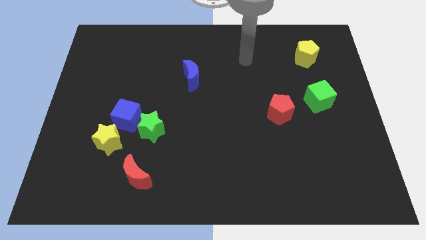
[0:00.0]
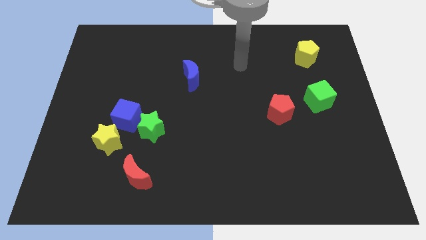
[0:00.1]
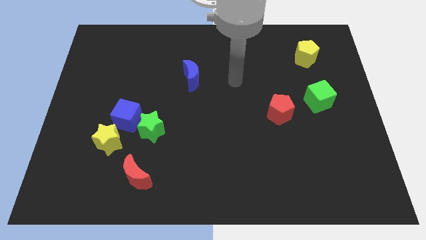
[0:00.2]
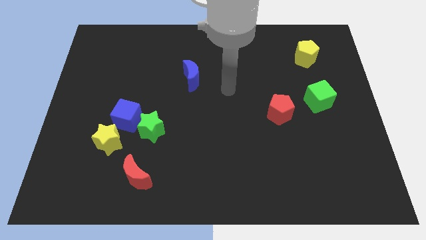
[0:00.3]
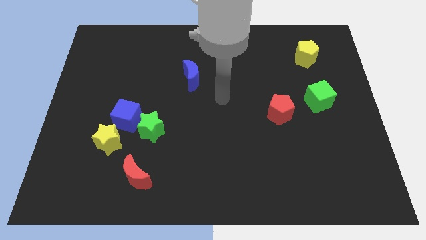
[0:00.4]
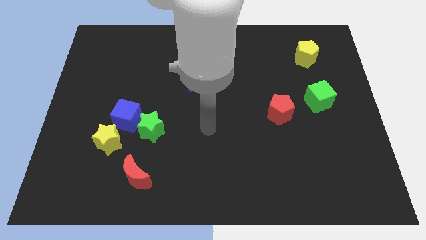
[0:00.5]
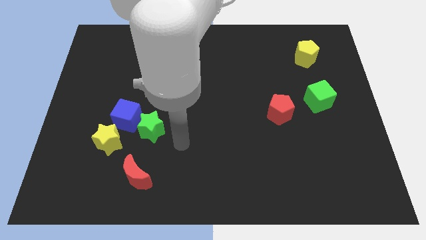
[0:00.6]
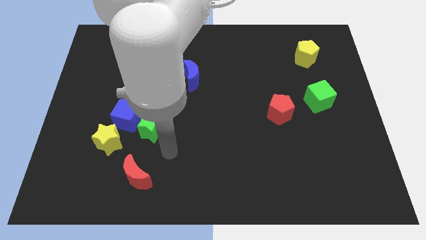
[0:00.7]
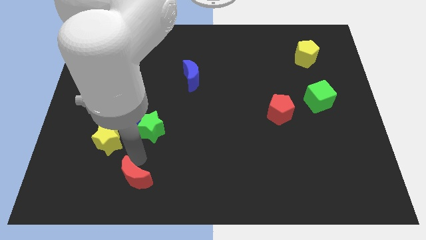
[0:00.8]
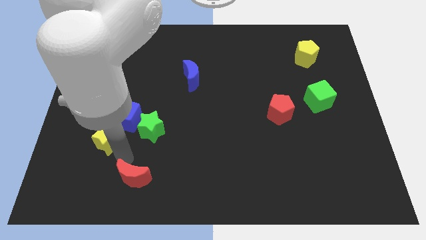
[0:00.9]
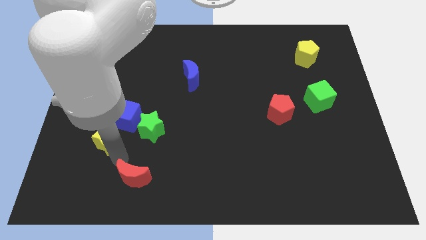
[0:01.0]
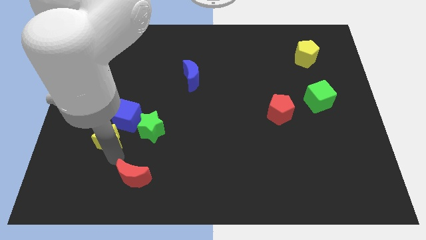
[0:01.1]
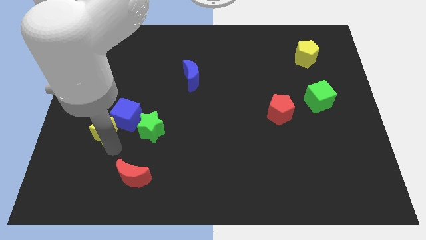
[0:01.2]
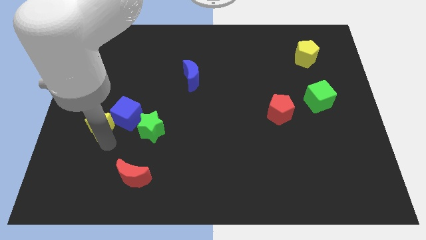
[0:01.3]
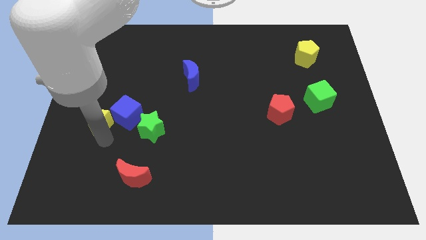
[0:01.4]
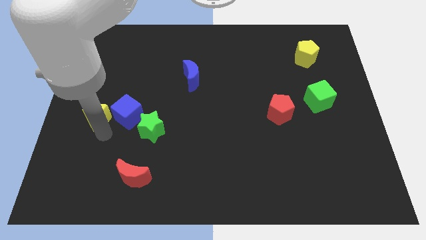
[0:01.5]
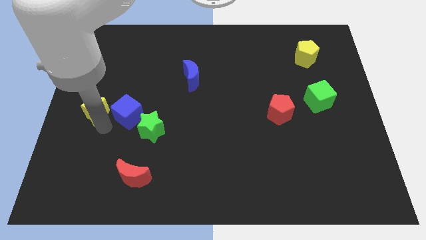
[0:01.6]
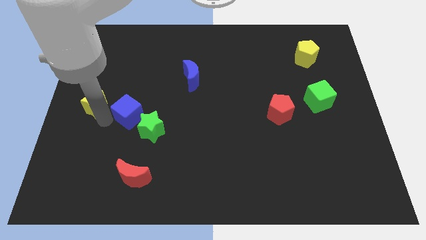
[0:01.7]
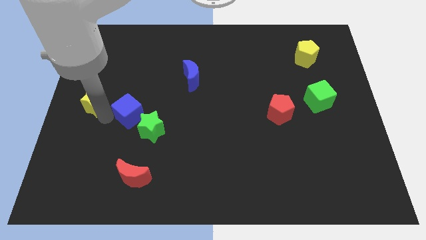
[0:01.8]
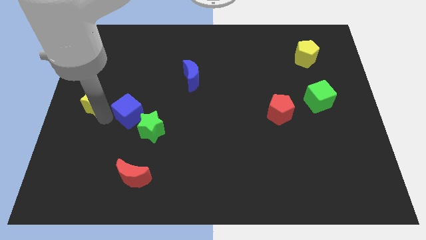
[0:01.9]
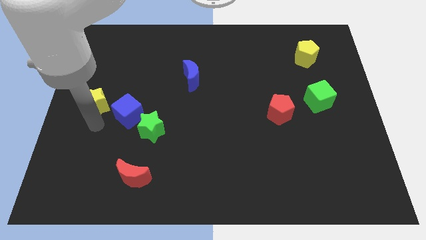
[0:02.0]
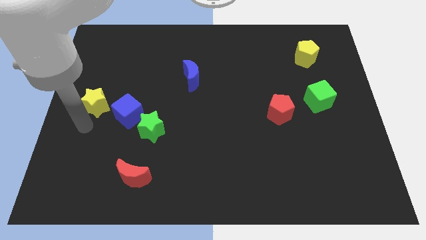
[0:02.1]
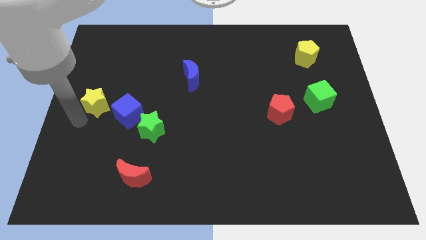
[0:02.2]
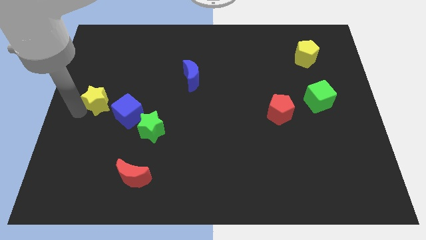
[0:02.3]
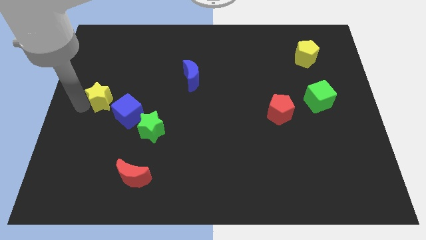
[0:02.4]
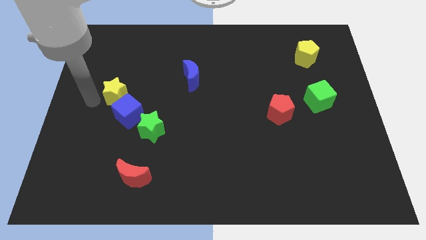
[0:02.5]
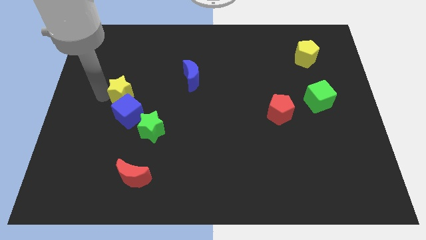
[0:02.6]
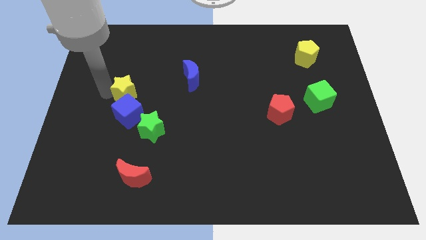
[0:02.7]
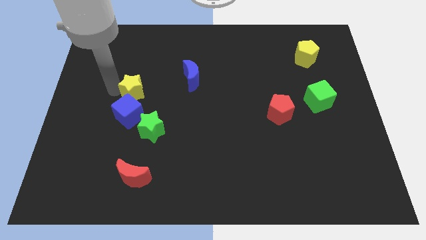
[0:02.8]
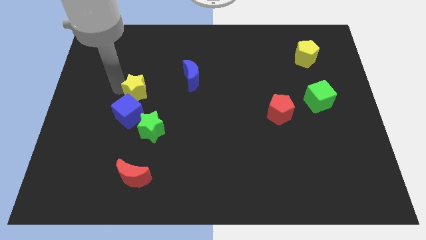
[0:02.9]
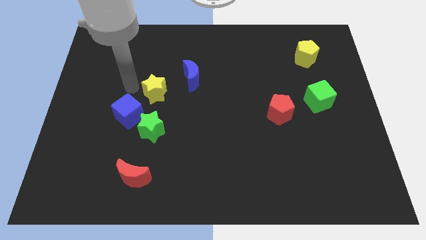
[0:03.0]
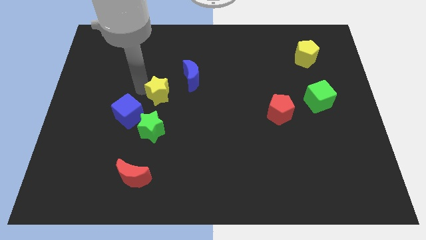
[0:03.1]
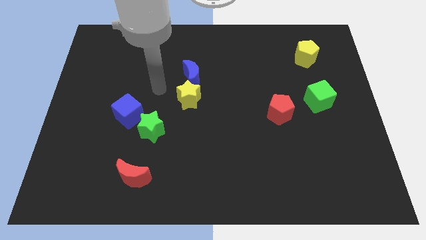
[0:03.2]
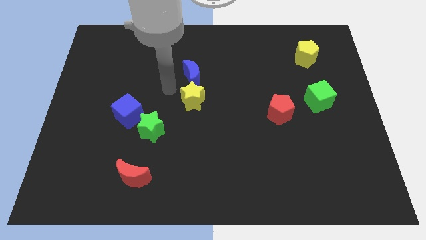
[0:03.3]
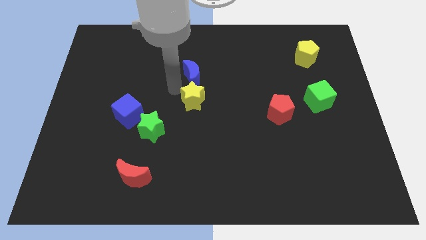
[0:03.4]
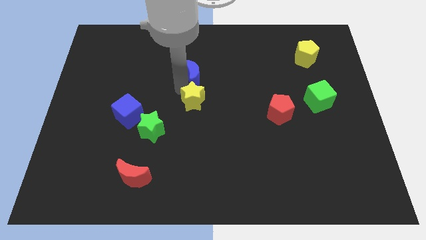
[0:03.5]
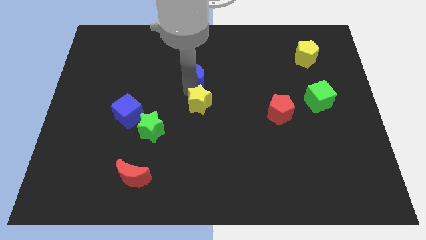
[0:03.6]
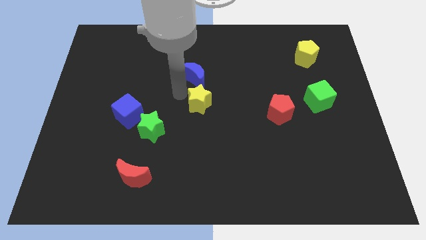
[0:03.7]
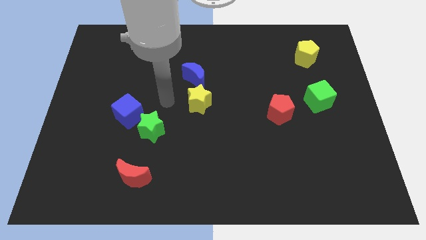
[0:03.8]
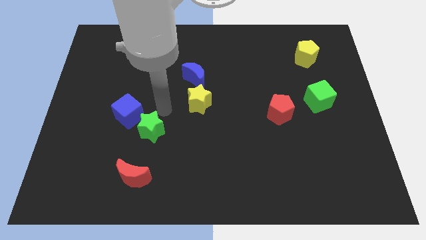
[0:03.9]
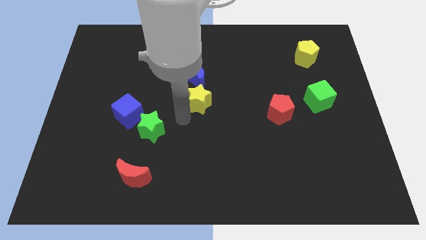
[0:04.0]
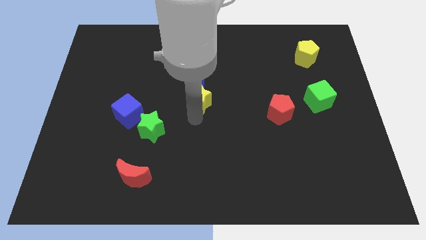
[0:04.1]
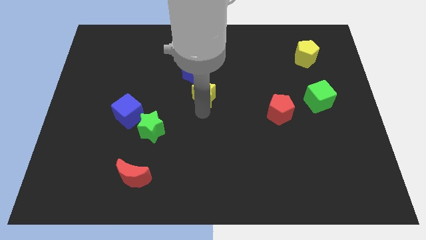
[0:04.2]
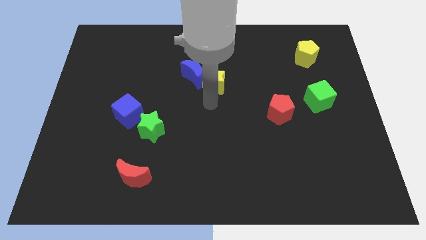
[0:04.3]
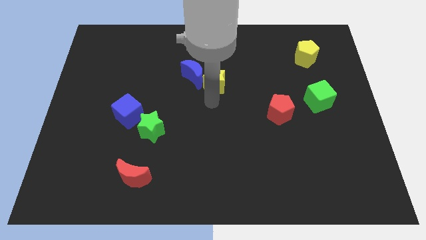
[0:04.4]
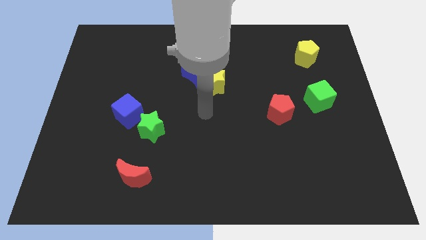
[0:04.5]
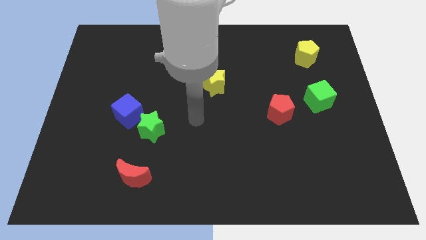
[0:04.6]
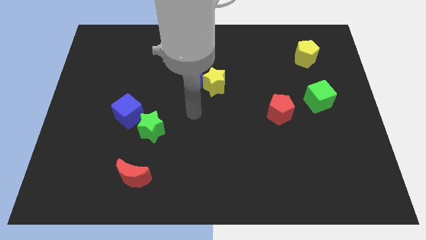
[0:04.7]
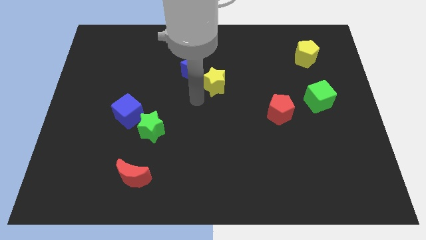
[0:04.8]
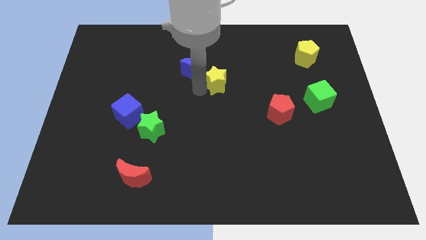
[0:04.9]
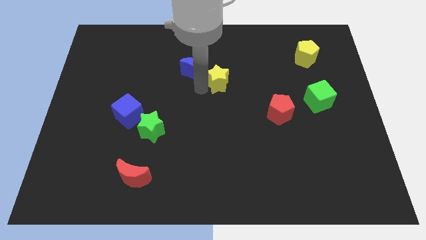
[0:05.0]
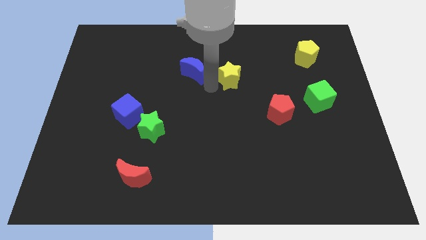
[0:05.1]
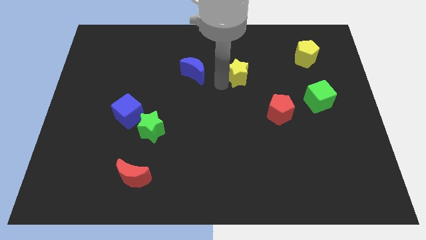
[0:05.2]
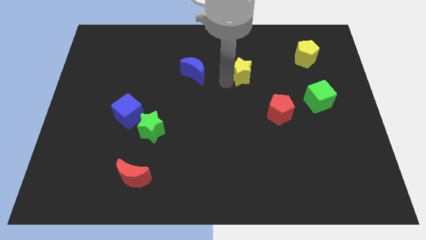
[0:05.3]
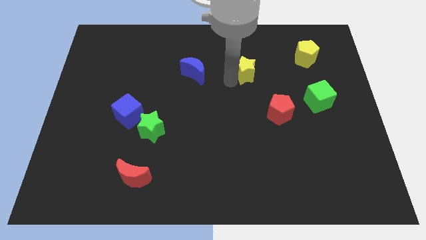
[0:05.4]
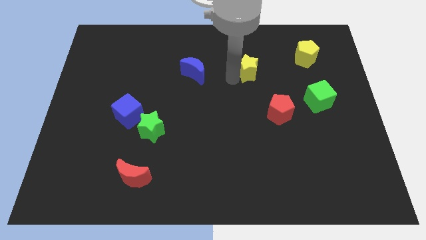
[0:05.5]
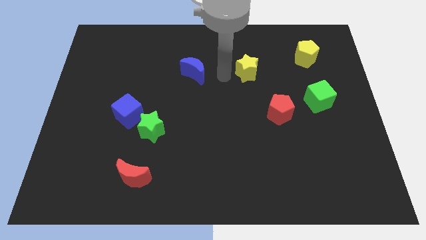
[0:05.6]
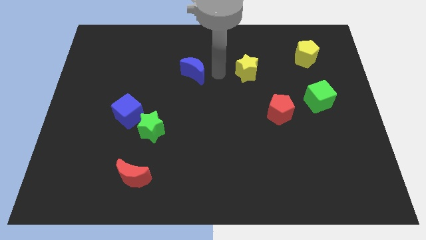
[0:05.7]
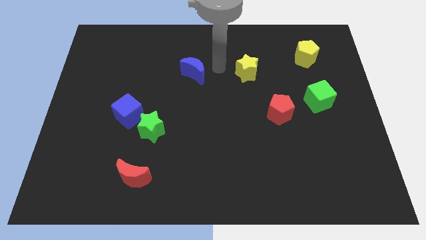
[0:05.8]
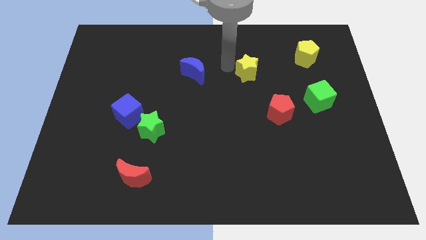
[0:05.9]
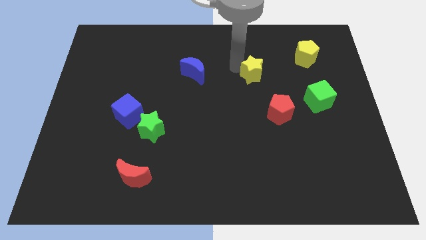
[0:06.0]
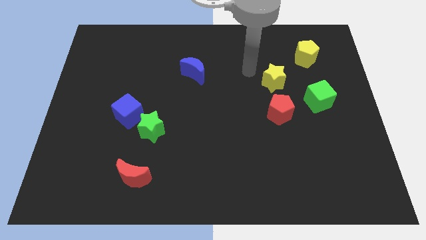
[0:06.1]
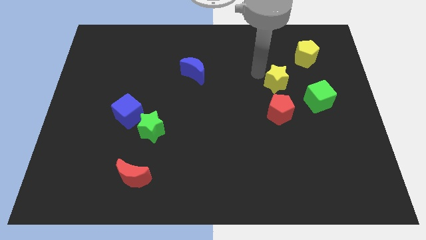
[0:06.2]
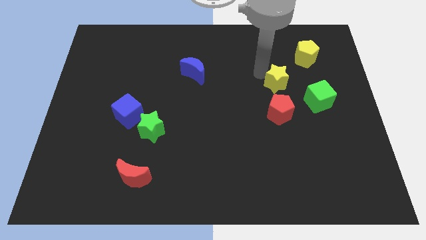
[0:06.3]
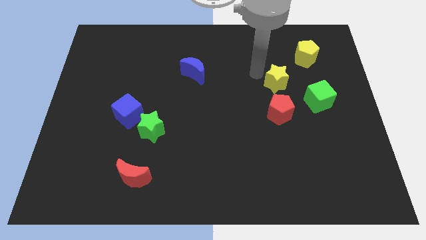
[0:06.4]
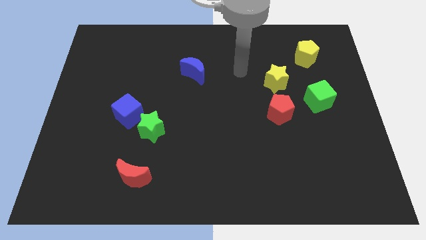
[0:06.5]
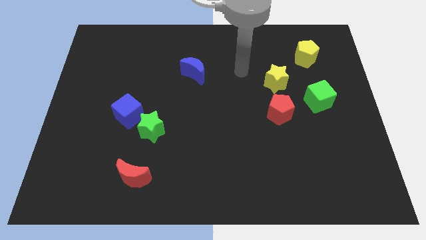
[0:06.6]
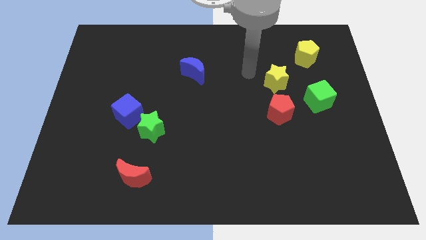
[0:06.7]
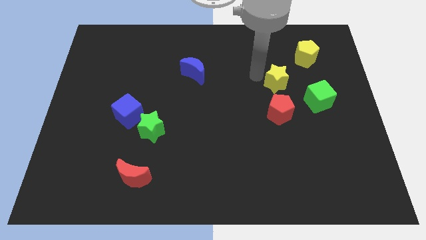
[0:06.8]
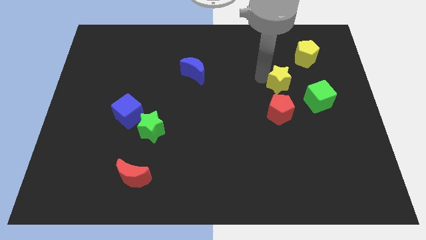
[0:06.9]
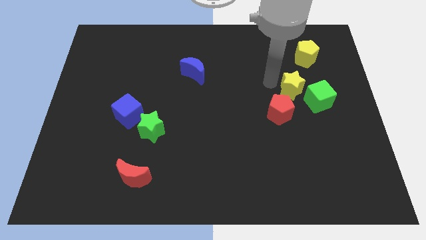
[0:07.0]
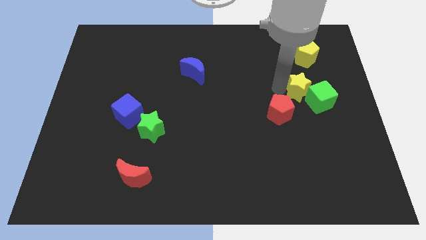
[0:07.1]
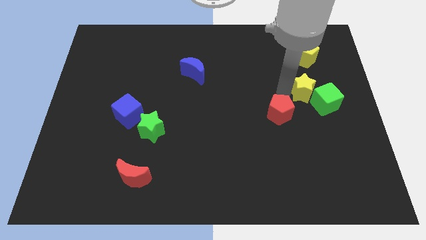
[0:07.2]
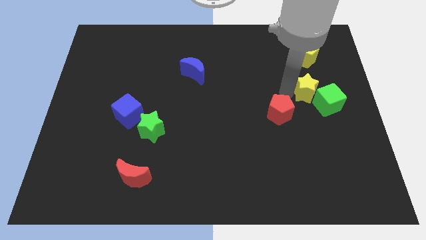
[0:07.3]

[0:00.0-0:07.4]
move the yellow star to the green cube

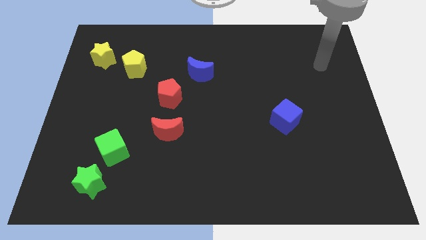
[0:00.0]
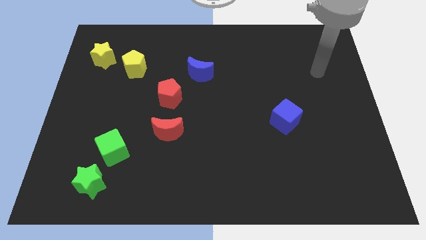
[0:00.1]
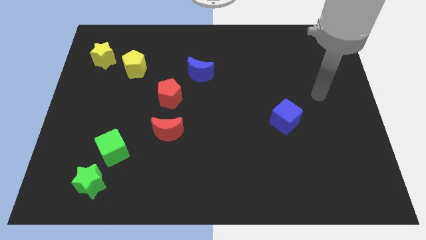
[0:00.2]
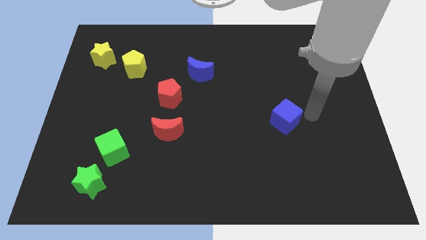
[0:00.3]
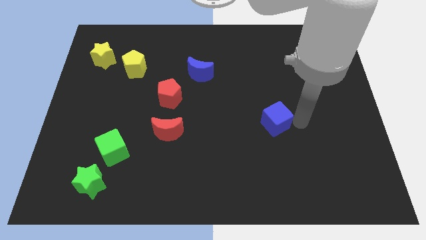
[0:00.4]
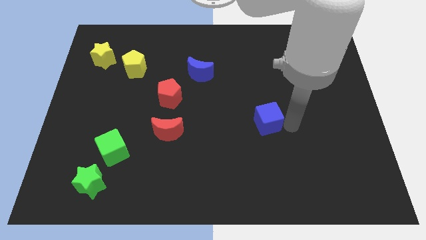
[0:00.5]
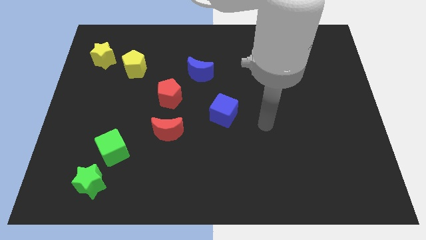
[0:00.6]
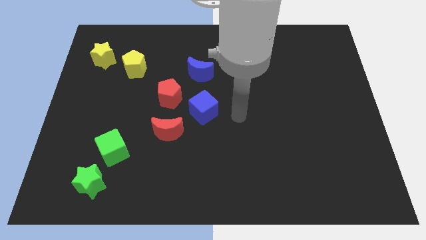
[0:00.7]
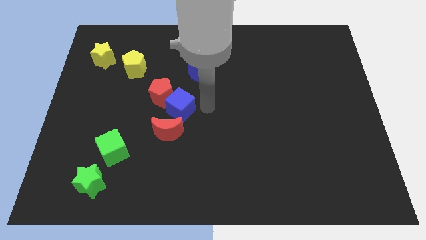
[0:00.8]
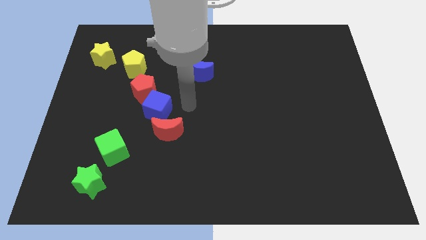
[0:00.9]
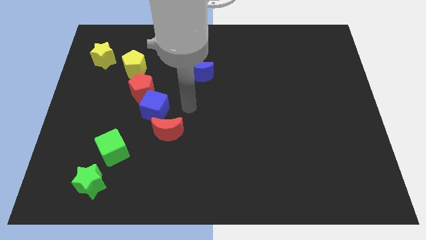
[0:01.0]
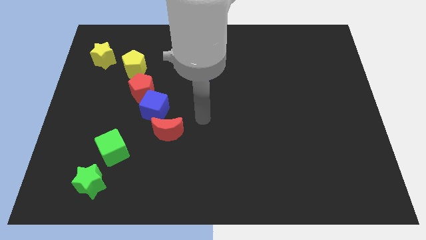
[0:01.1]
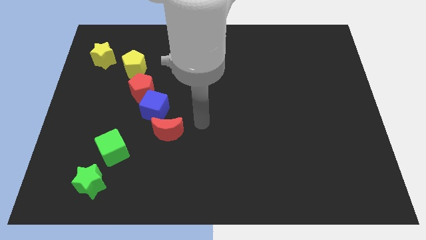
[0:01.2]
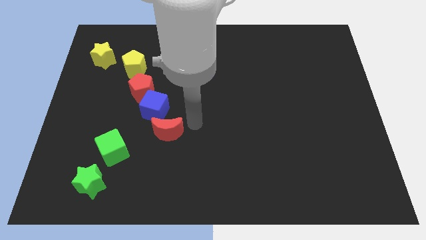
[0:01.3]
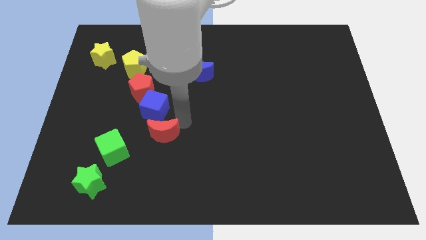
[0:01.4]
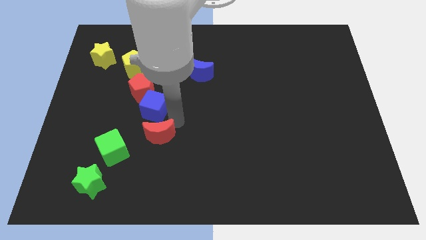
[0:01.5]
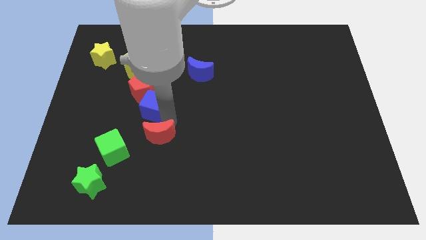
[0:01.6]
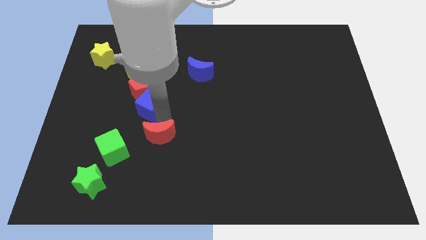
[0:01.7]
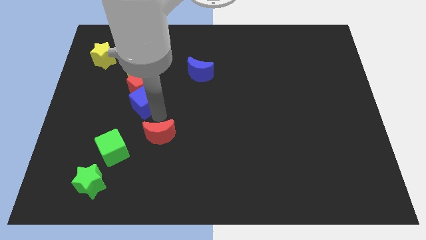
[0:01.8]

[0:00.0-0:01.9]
put the blue cube towards the red pentagon
